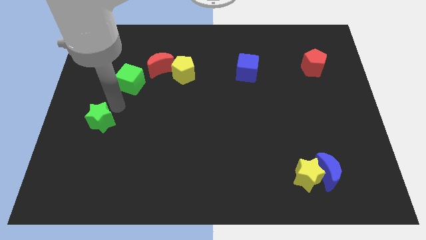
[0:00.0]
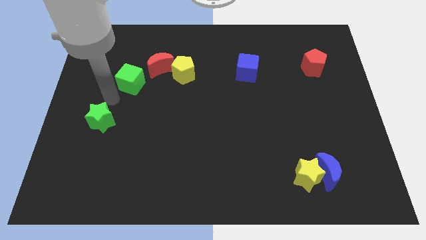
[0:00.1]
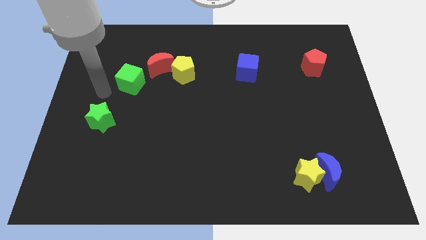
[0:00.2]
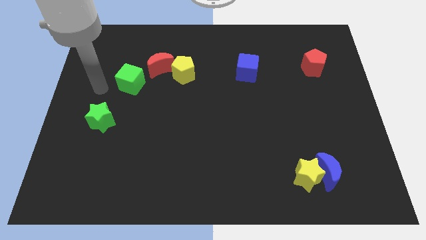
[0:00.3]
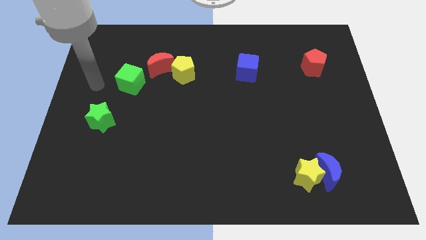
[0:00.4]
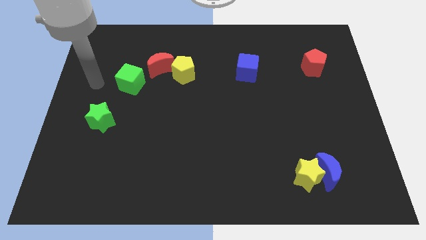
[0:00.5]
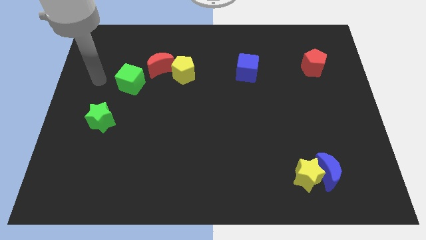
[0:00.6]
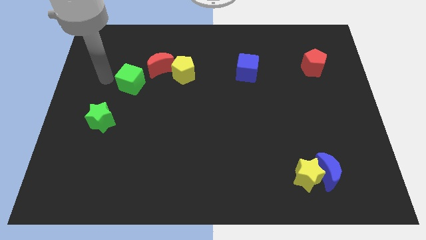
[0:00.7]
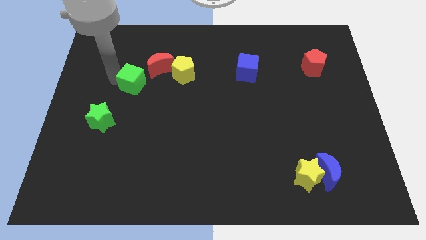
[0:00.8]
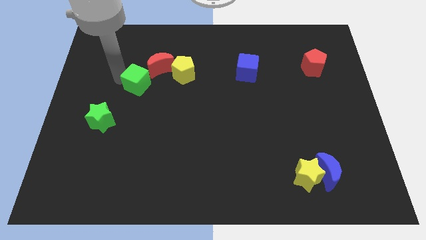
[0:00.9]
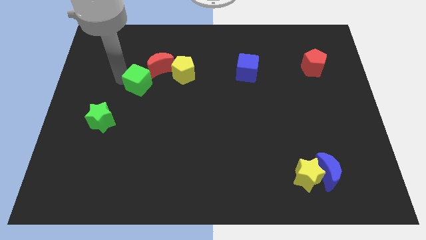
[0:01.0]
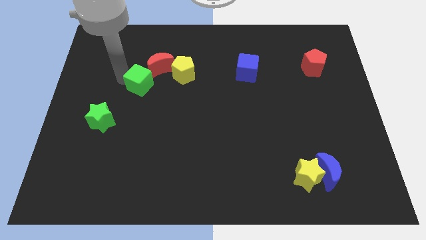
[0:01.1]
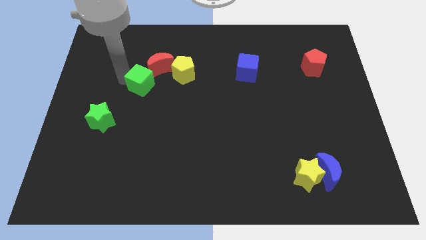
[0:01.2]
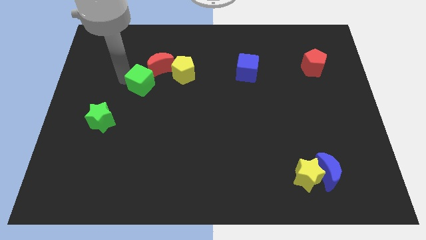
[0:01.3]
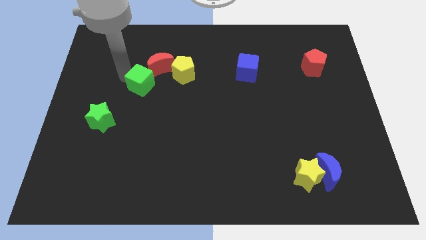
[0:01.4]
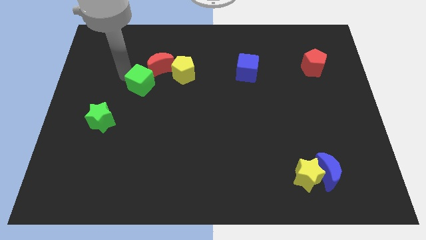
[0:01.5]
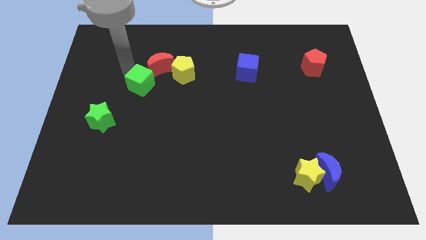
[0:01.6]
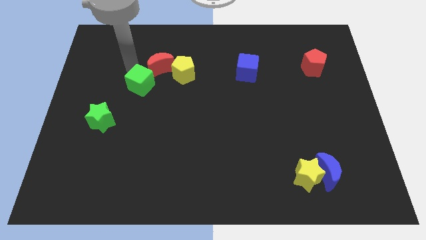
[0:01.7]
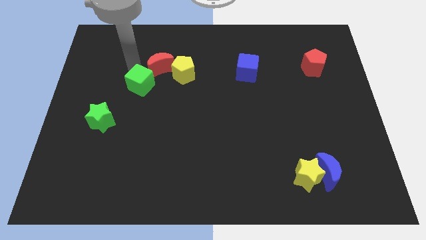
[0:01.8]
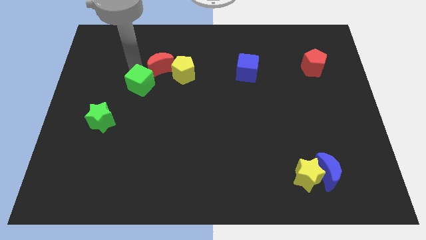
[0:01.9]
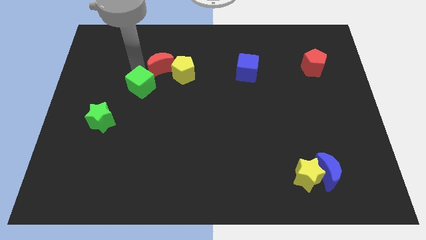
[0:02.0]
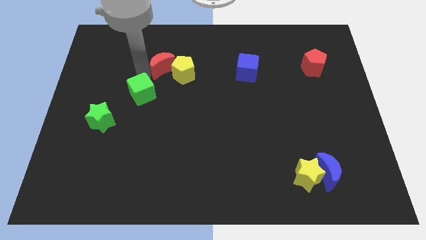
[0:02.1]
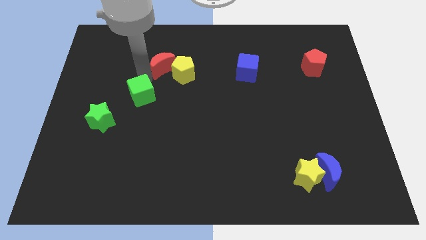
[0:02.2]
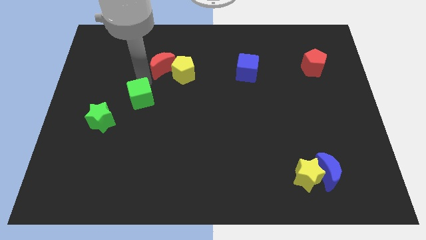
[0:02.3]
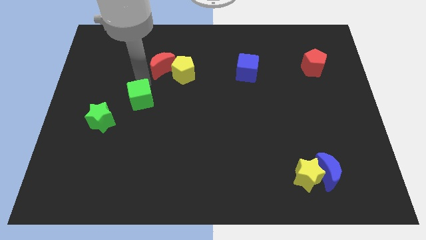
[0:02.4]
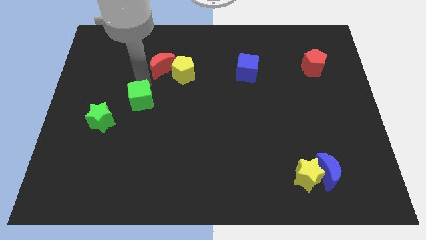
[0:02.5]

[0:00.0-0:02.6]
move the green cube in between the yellow pentagon and green star

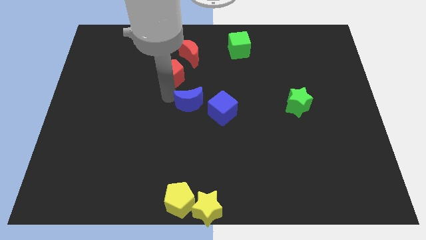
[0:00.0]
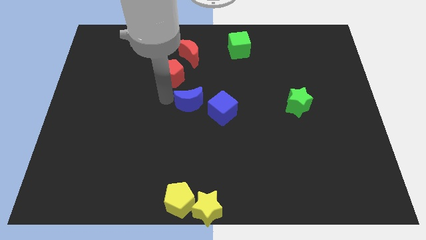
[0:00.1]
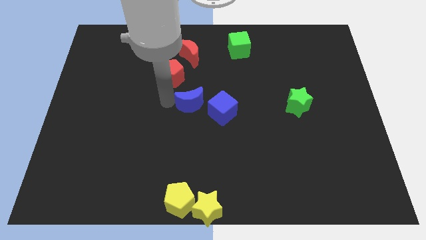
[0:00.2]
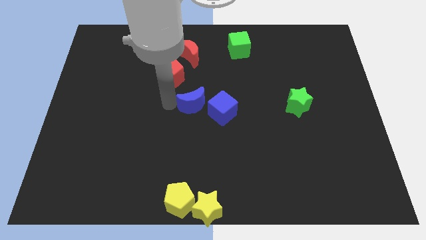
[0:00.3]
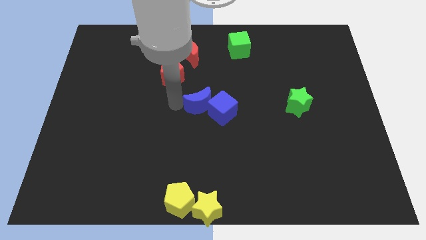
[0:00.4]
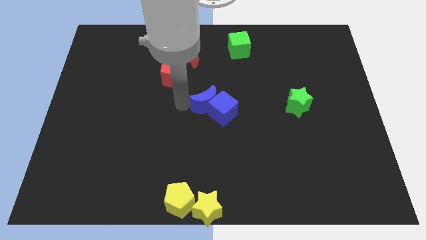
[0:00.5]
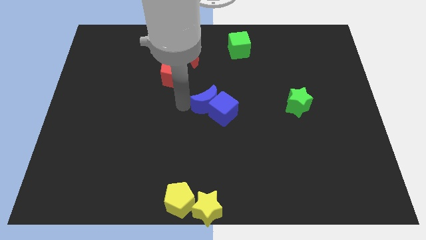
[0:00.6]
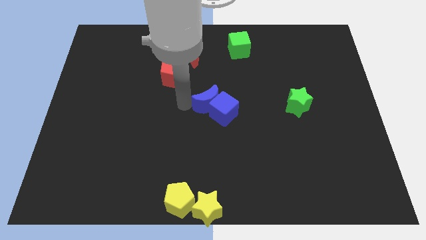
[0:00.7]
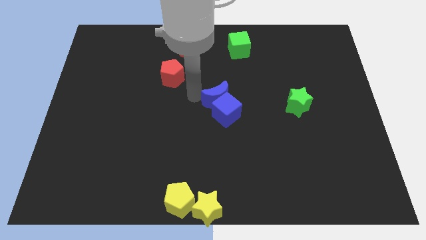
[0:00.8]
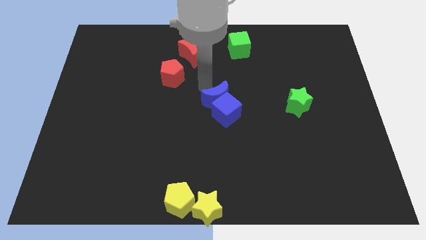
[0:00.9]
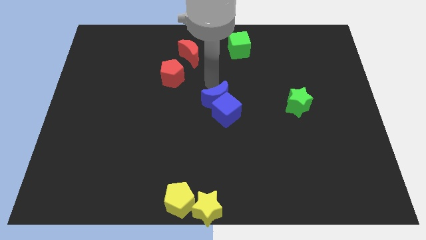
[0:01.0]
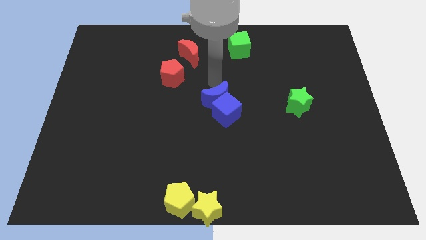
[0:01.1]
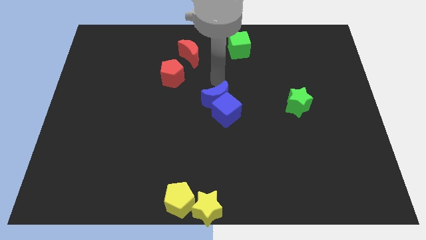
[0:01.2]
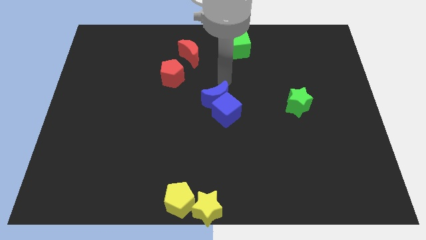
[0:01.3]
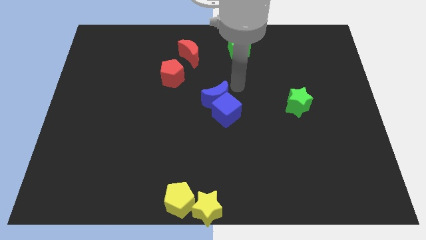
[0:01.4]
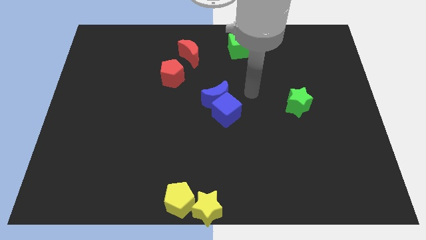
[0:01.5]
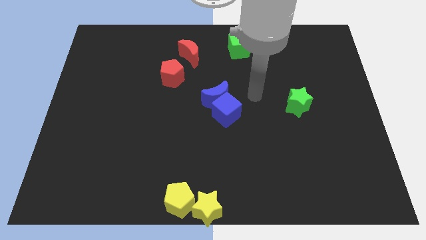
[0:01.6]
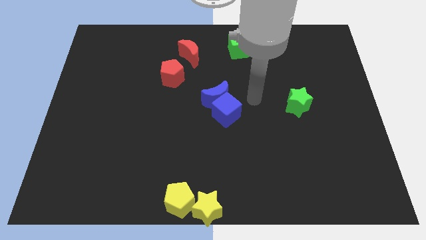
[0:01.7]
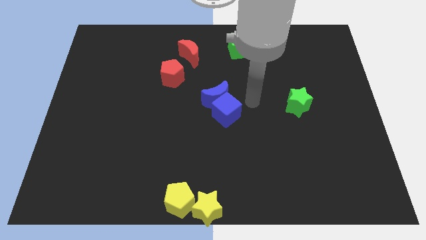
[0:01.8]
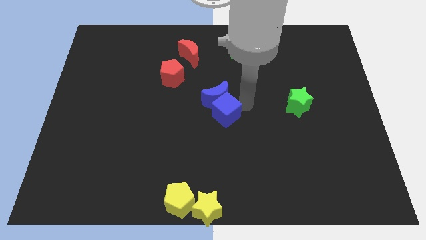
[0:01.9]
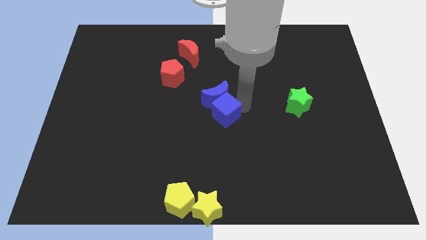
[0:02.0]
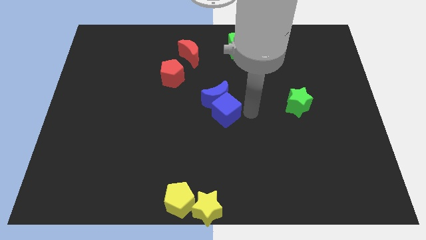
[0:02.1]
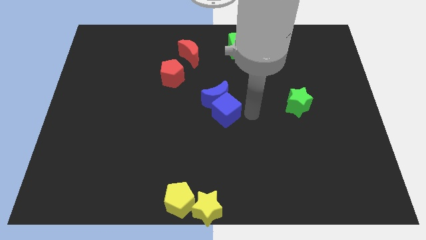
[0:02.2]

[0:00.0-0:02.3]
push the blue moon into the blue cube

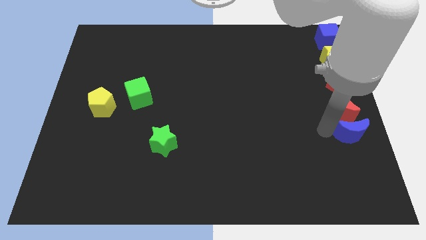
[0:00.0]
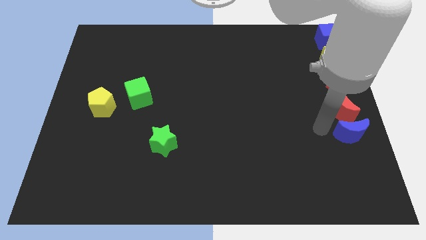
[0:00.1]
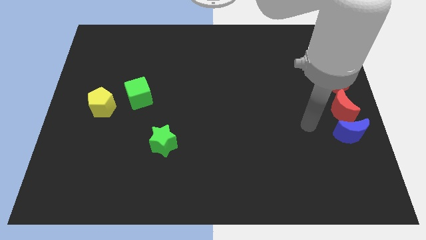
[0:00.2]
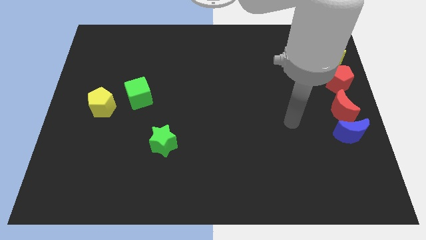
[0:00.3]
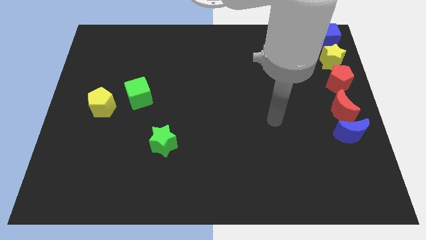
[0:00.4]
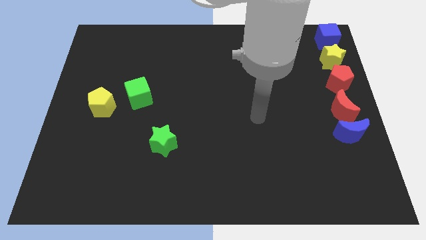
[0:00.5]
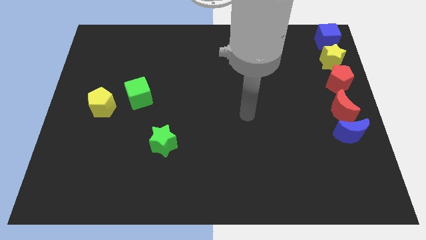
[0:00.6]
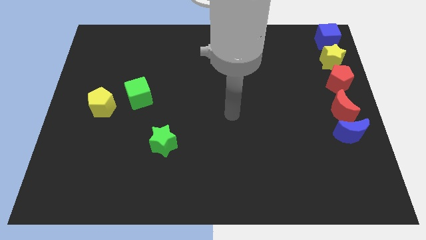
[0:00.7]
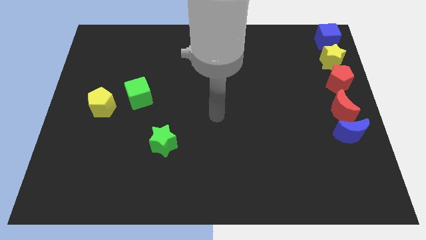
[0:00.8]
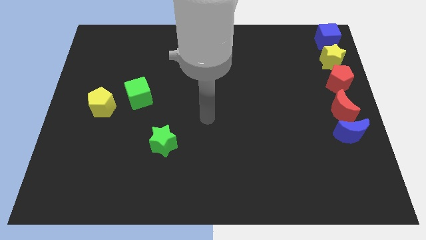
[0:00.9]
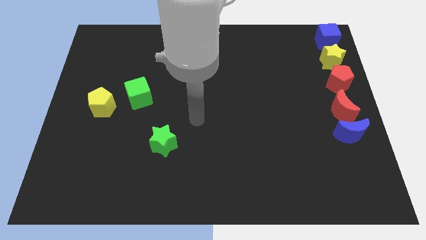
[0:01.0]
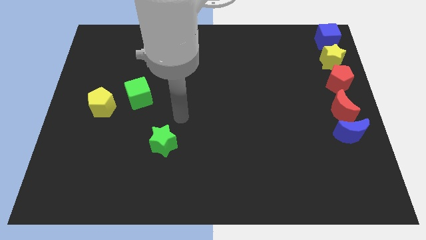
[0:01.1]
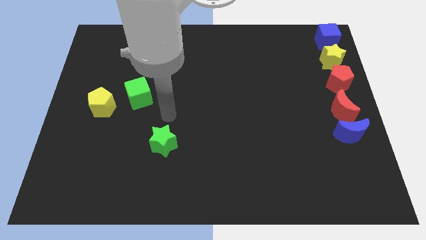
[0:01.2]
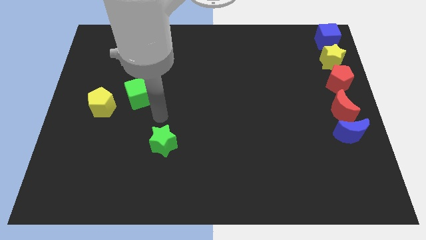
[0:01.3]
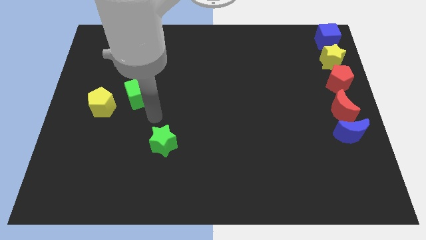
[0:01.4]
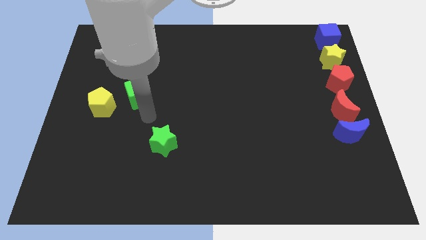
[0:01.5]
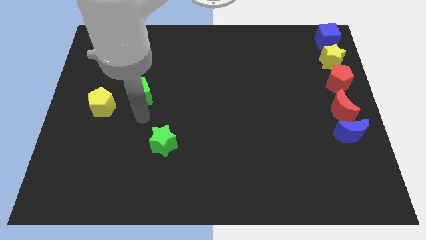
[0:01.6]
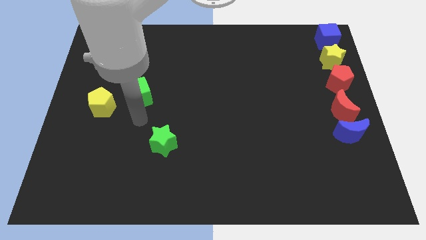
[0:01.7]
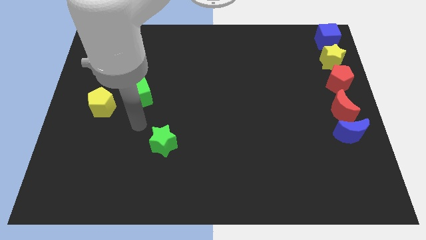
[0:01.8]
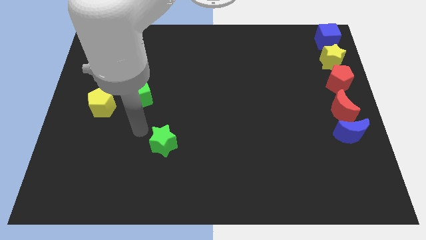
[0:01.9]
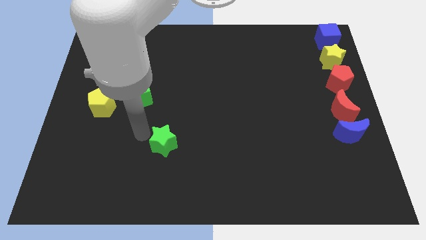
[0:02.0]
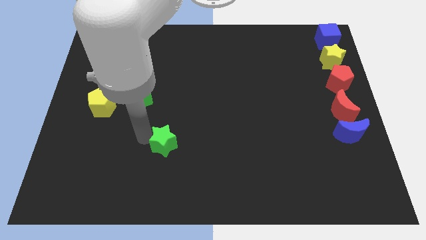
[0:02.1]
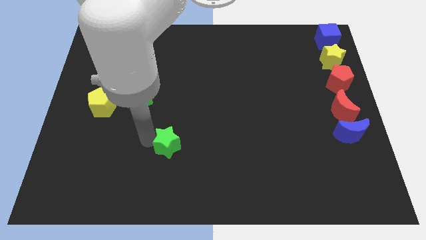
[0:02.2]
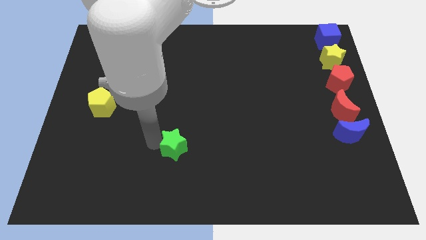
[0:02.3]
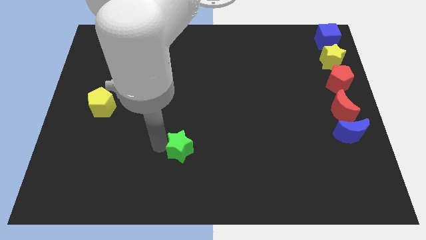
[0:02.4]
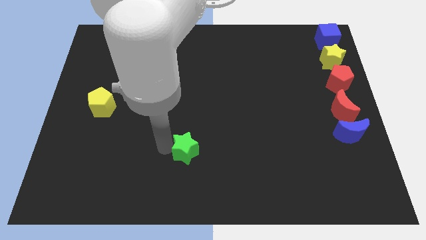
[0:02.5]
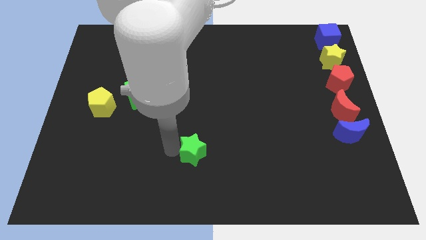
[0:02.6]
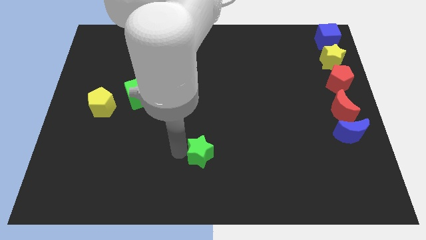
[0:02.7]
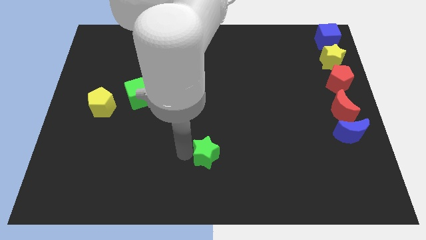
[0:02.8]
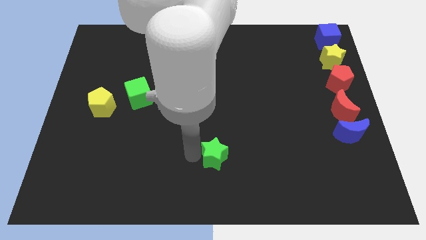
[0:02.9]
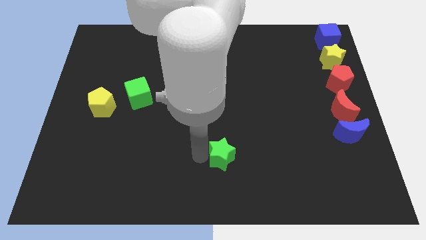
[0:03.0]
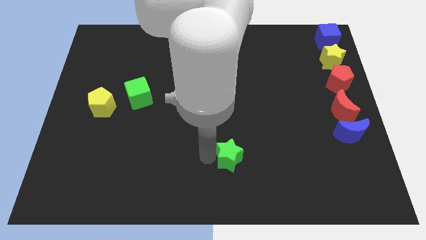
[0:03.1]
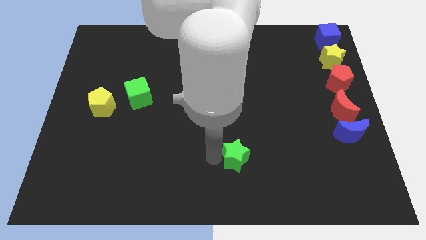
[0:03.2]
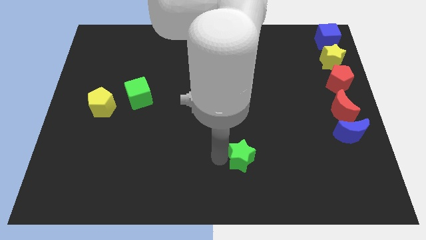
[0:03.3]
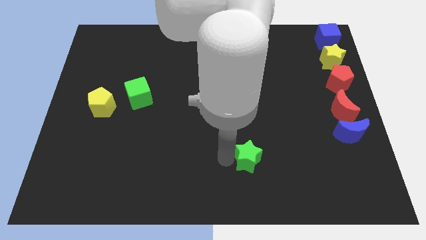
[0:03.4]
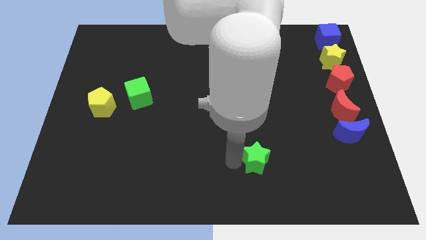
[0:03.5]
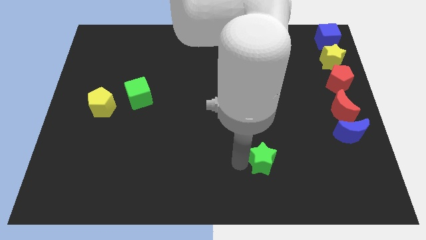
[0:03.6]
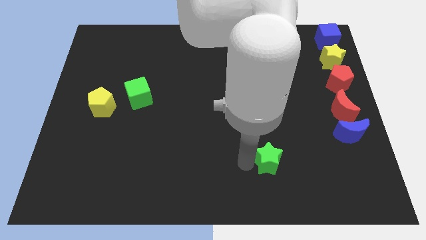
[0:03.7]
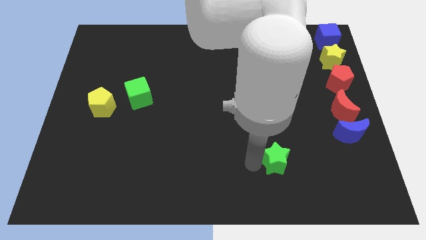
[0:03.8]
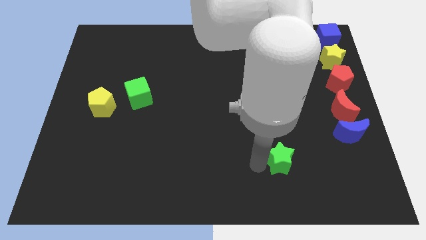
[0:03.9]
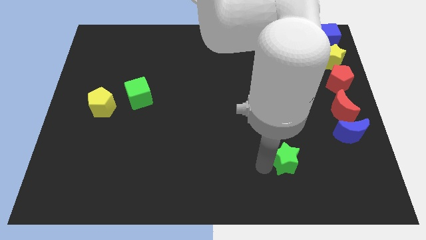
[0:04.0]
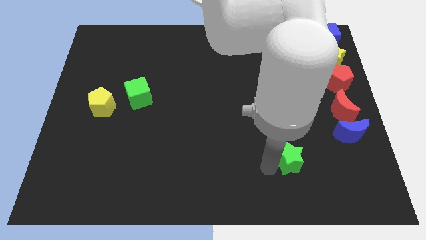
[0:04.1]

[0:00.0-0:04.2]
push the green star towards the bottom right
